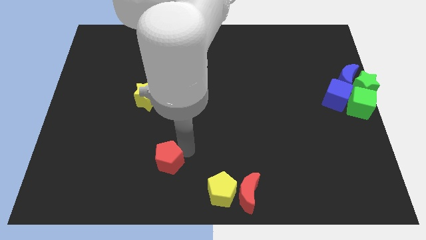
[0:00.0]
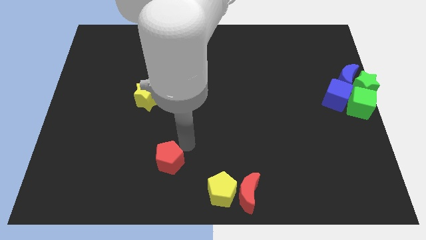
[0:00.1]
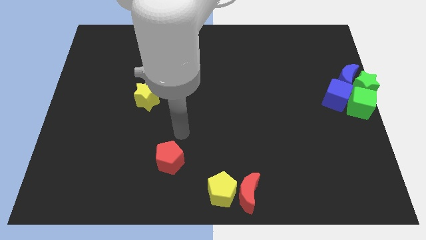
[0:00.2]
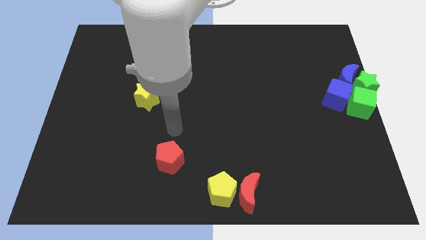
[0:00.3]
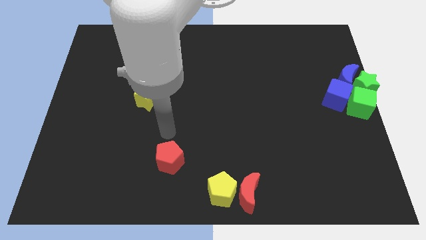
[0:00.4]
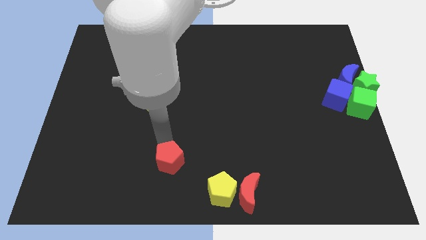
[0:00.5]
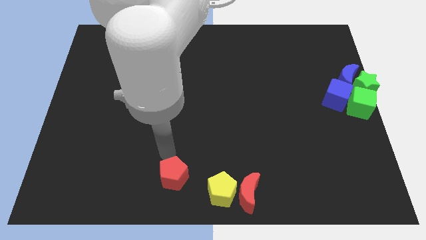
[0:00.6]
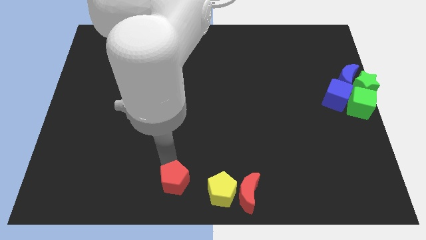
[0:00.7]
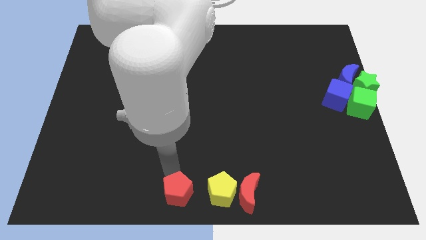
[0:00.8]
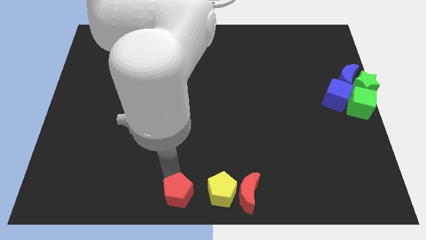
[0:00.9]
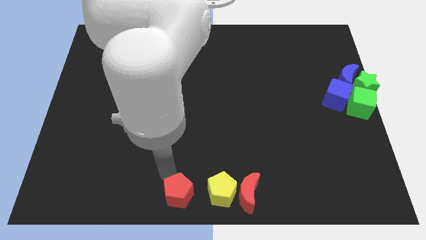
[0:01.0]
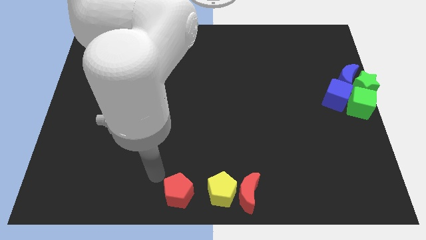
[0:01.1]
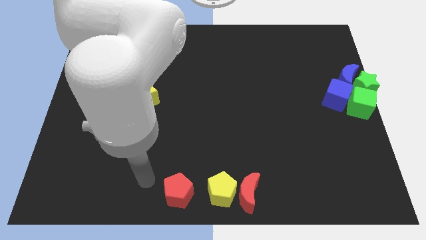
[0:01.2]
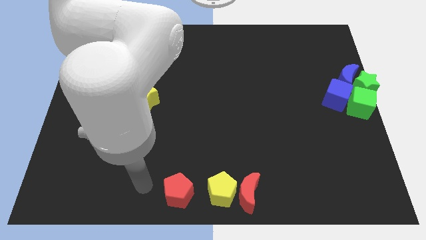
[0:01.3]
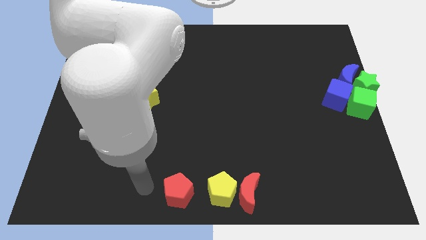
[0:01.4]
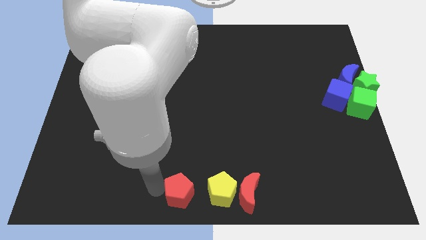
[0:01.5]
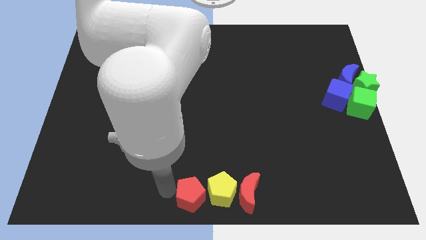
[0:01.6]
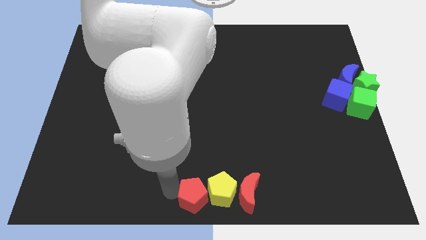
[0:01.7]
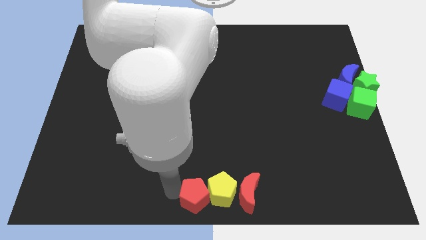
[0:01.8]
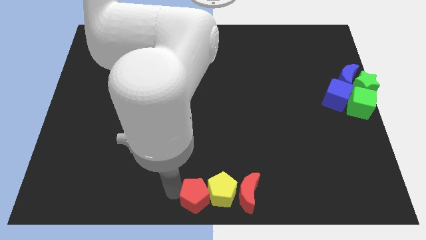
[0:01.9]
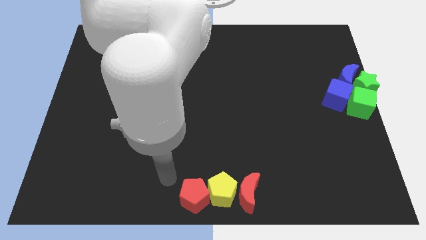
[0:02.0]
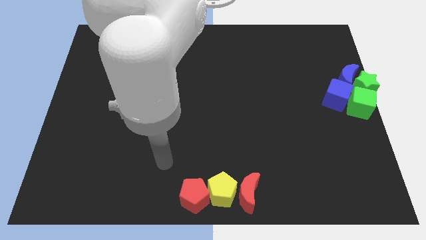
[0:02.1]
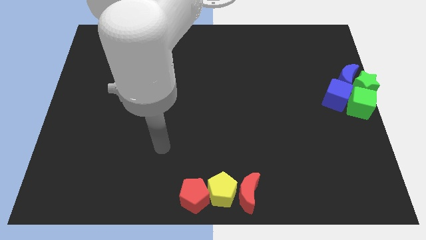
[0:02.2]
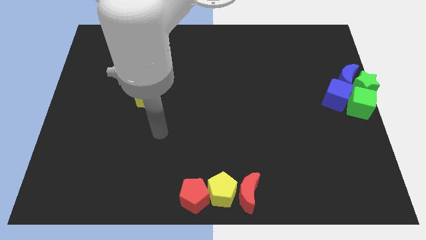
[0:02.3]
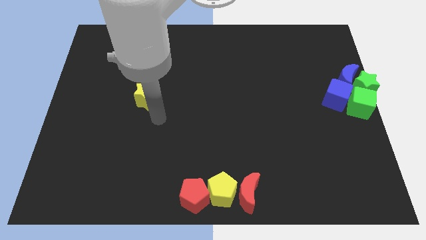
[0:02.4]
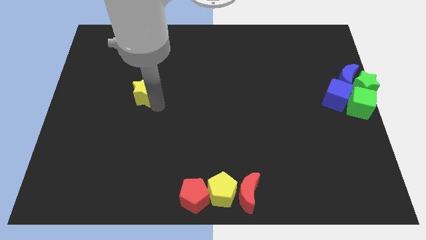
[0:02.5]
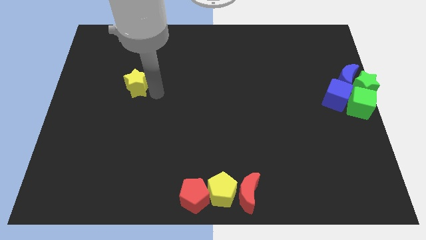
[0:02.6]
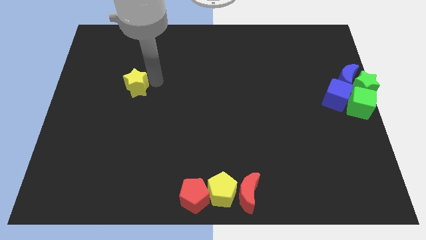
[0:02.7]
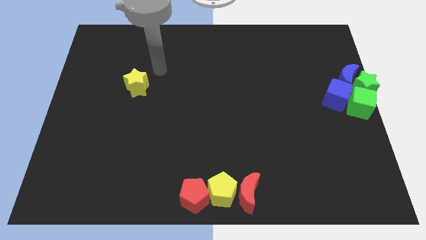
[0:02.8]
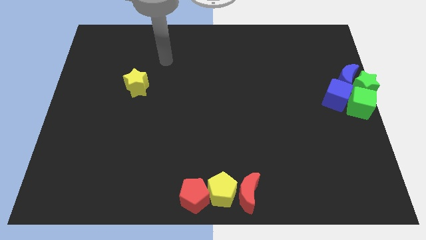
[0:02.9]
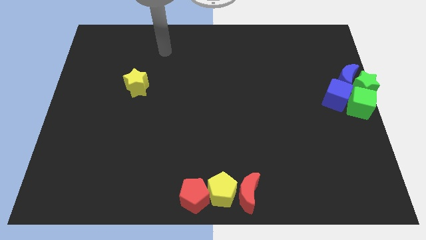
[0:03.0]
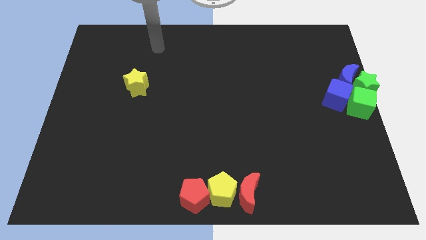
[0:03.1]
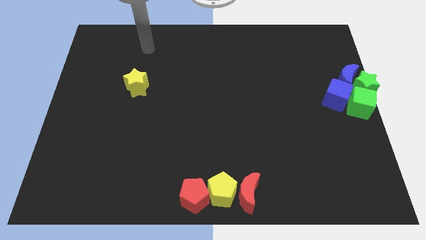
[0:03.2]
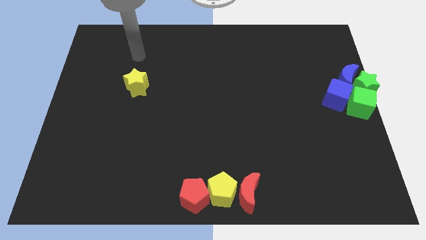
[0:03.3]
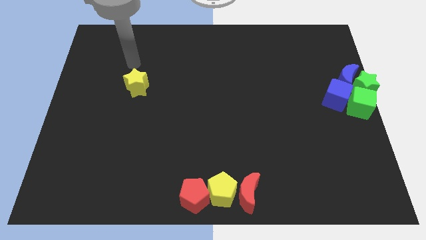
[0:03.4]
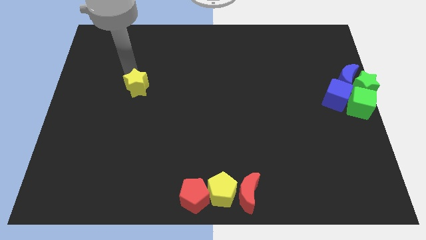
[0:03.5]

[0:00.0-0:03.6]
place the red pentagon to the left side of the yellow pentagon to form a horizontal line

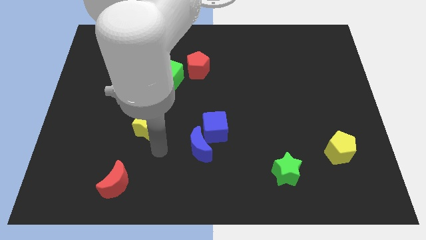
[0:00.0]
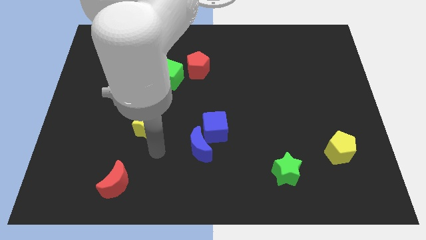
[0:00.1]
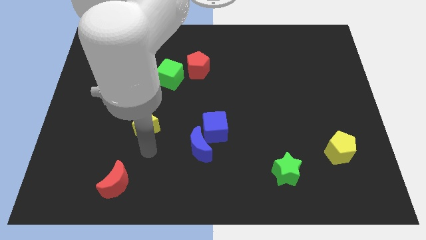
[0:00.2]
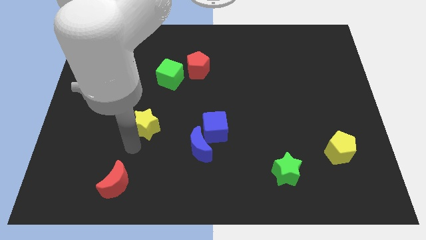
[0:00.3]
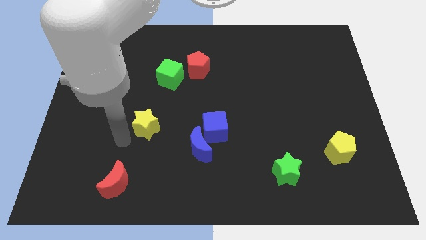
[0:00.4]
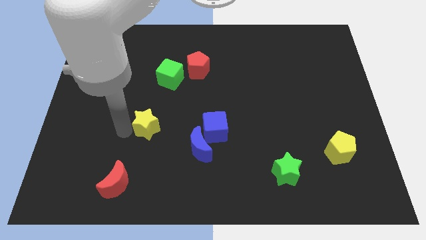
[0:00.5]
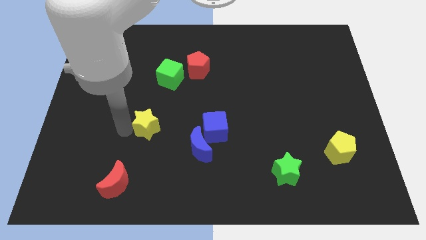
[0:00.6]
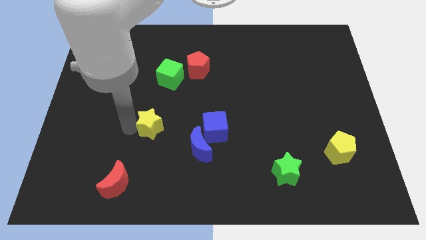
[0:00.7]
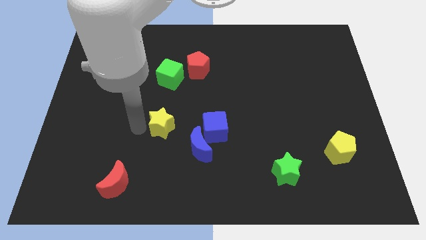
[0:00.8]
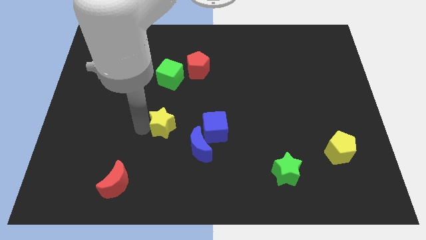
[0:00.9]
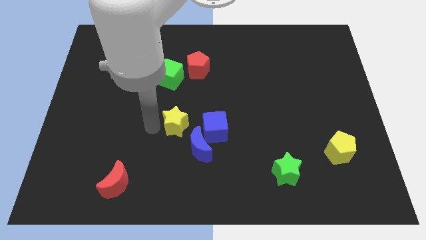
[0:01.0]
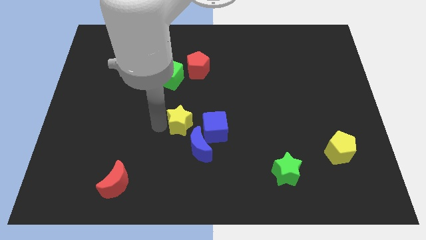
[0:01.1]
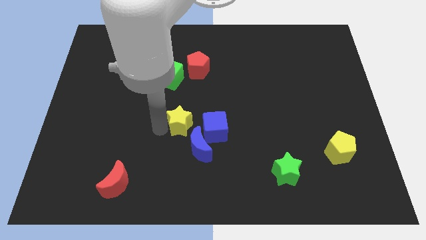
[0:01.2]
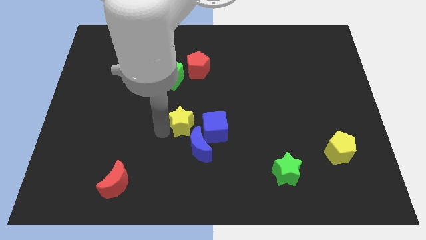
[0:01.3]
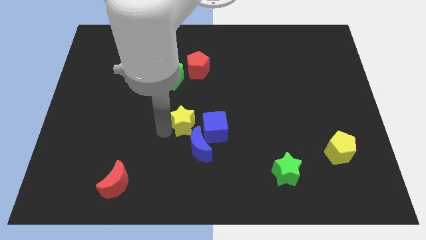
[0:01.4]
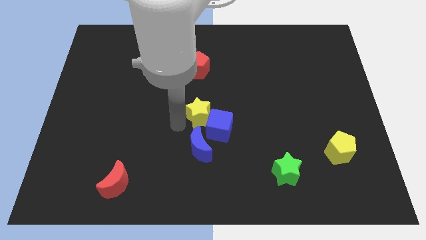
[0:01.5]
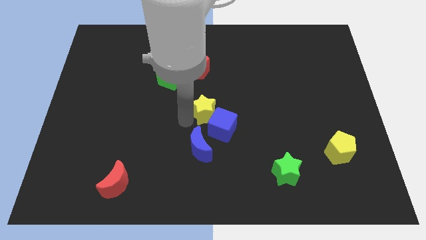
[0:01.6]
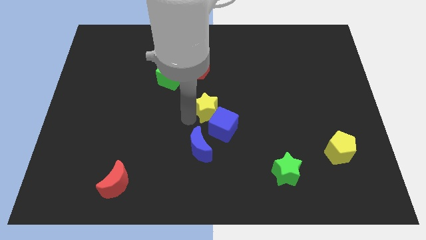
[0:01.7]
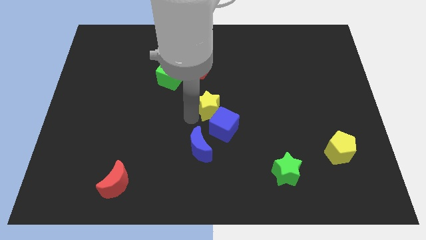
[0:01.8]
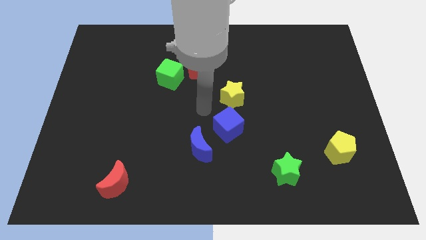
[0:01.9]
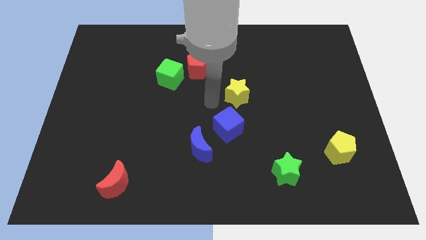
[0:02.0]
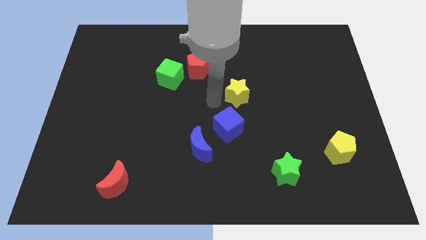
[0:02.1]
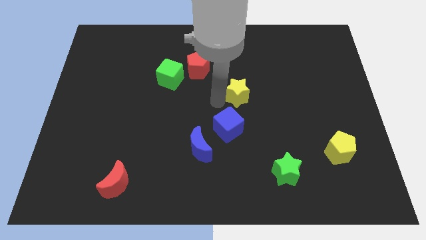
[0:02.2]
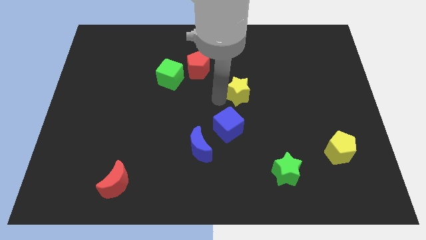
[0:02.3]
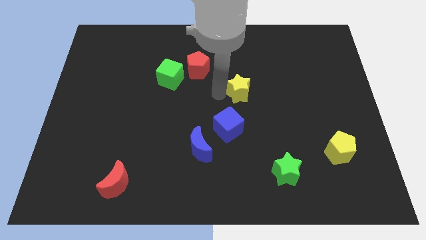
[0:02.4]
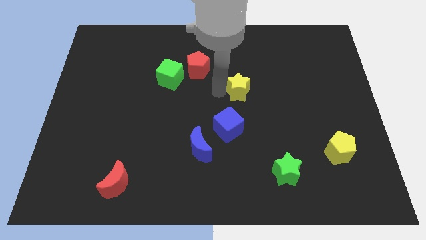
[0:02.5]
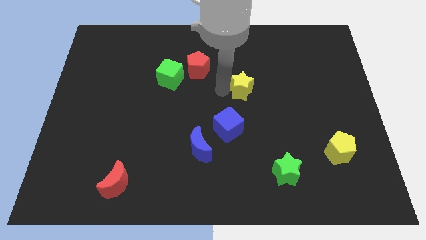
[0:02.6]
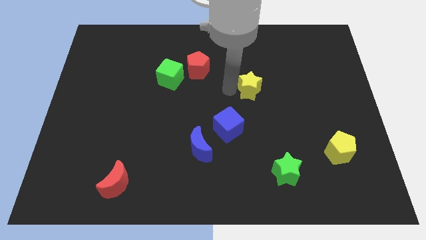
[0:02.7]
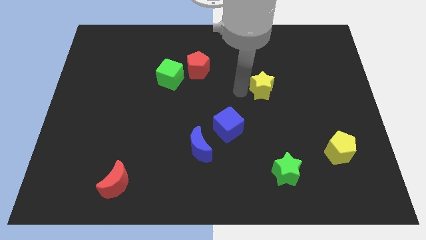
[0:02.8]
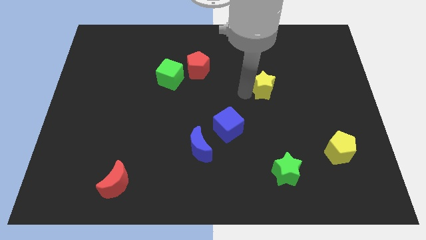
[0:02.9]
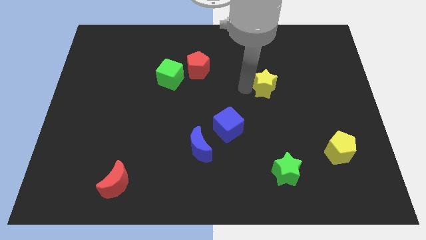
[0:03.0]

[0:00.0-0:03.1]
move the yellow star towards the top right side

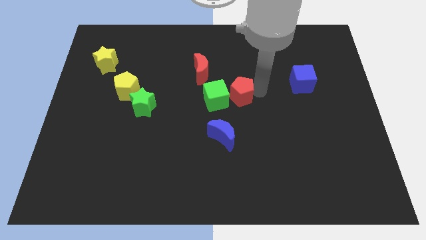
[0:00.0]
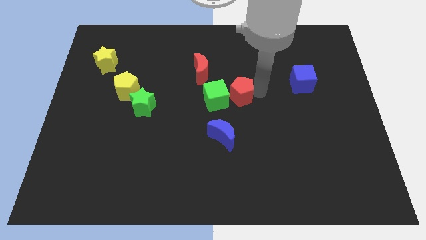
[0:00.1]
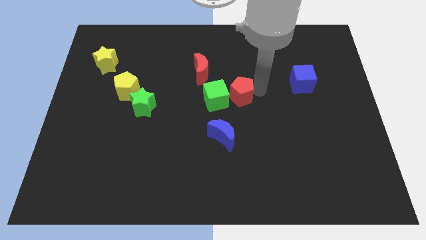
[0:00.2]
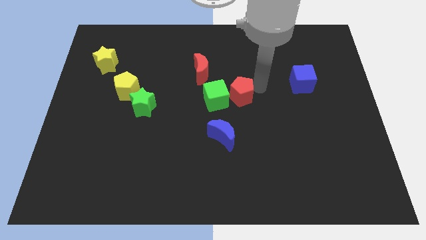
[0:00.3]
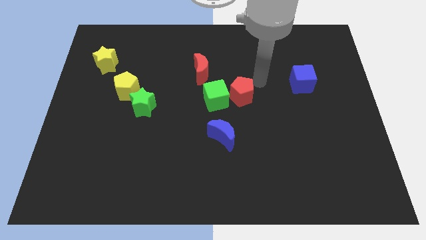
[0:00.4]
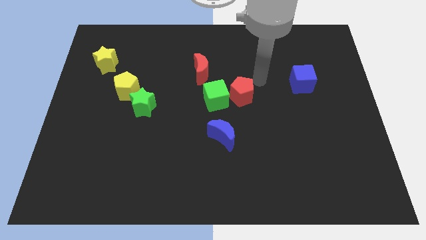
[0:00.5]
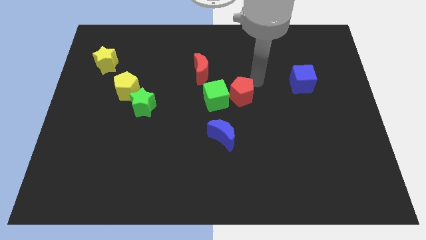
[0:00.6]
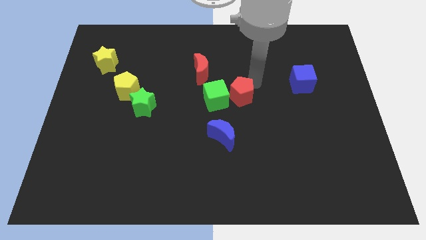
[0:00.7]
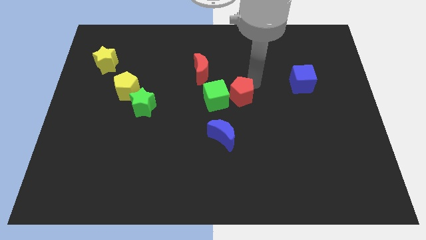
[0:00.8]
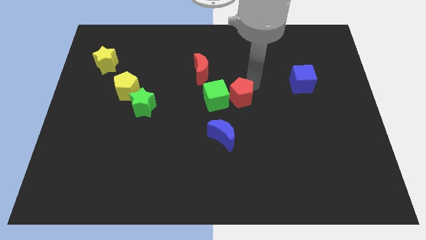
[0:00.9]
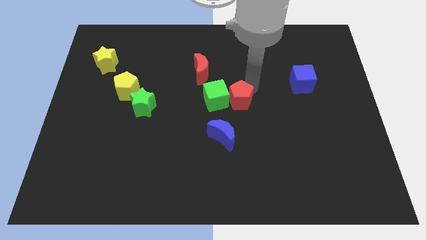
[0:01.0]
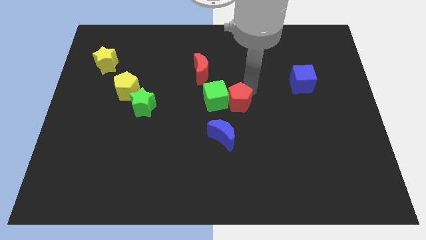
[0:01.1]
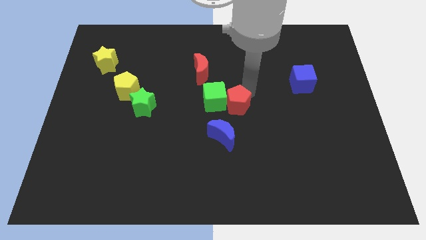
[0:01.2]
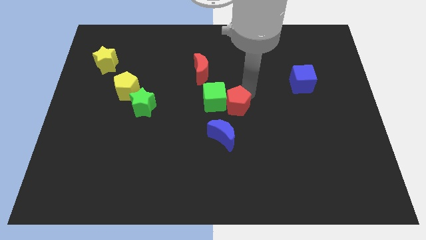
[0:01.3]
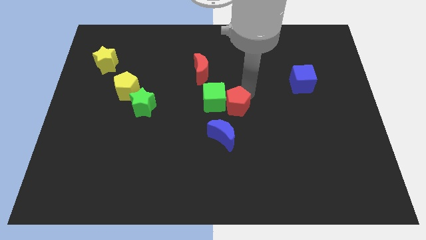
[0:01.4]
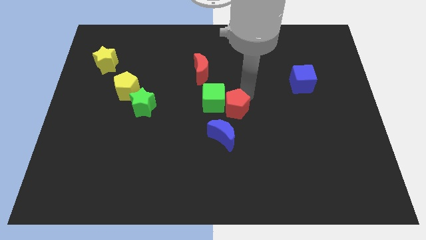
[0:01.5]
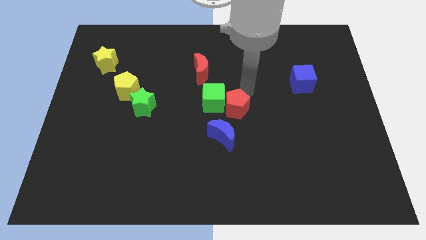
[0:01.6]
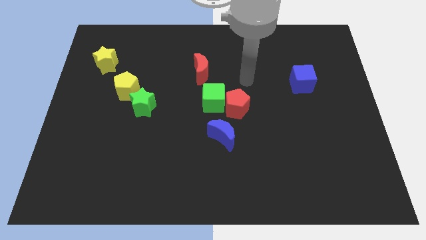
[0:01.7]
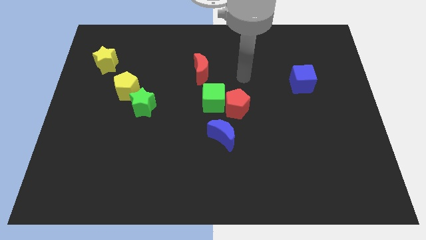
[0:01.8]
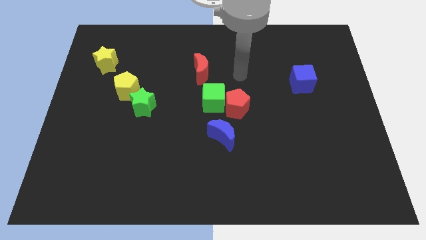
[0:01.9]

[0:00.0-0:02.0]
push the red pentagon diagonally to the top right of the blue moon

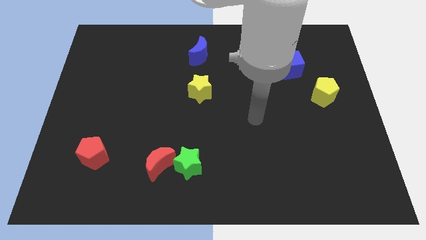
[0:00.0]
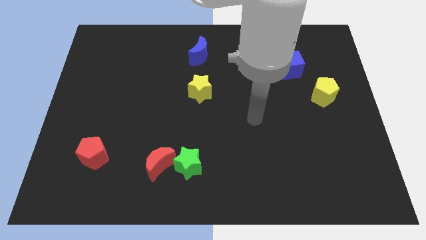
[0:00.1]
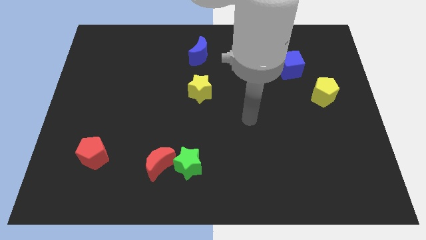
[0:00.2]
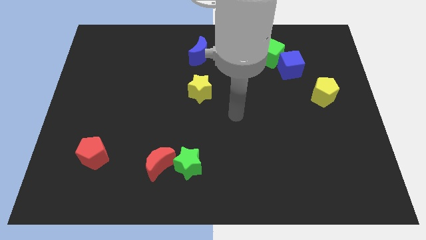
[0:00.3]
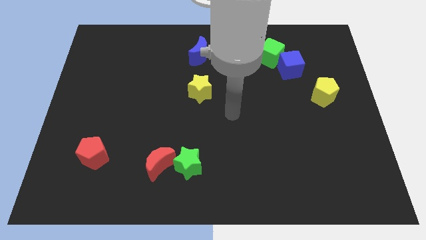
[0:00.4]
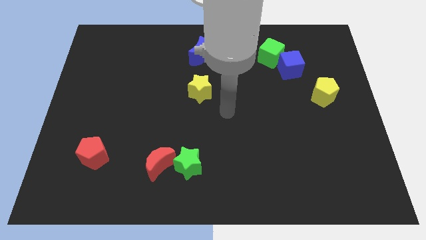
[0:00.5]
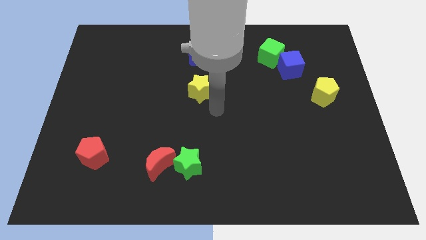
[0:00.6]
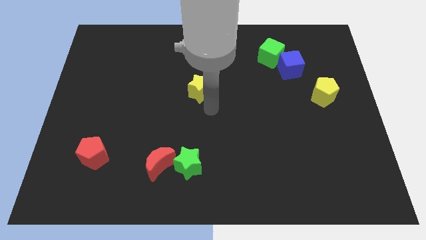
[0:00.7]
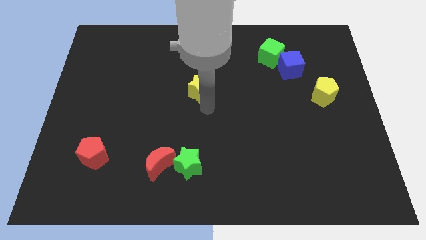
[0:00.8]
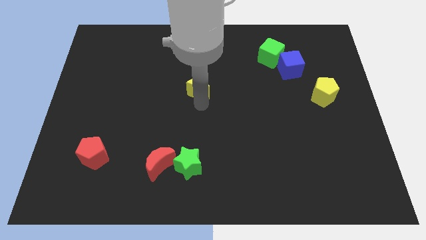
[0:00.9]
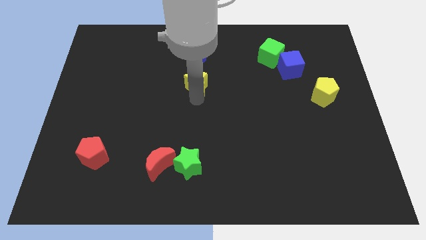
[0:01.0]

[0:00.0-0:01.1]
touch the bottom side of yellow star
